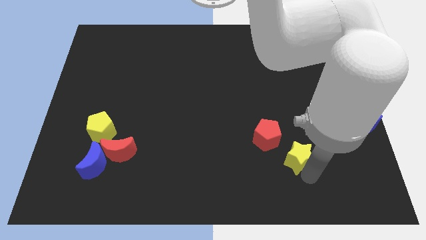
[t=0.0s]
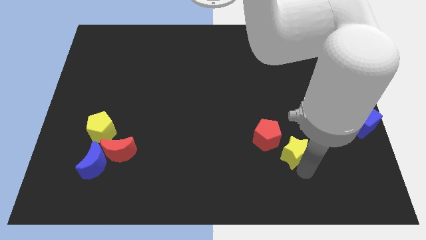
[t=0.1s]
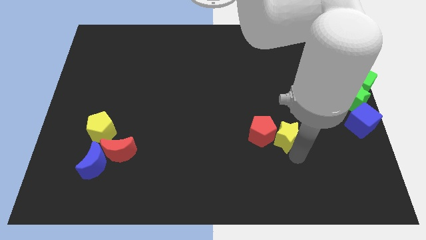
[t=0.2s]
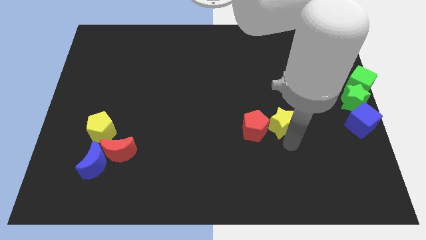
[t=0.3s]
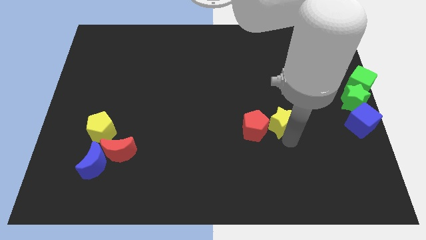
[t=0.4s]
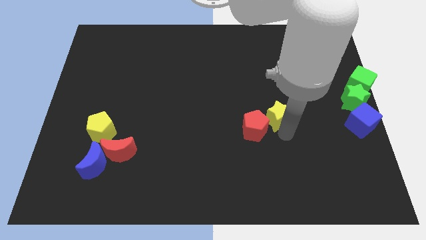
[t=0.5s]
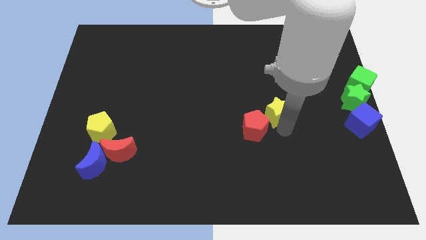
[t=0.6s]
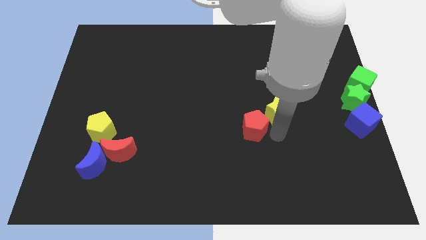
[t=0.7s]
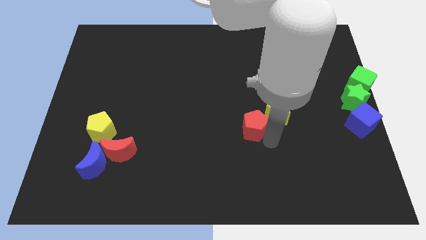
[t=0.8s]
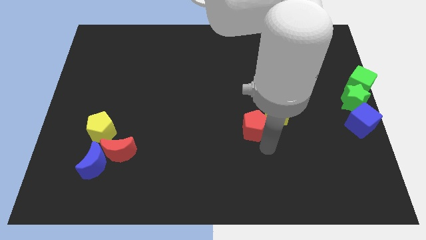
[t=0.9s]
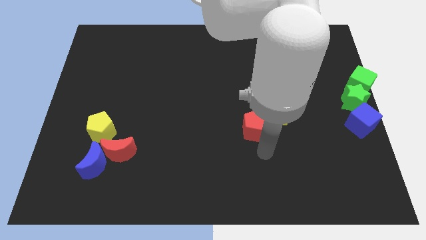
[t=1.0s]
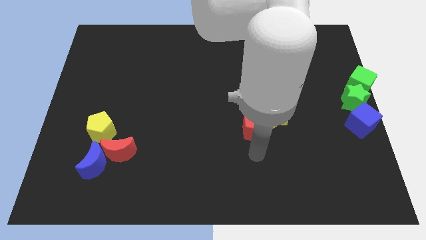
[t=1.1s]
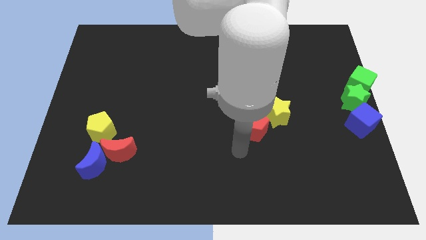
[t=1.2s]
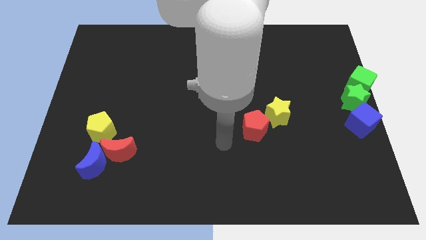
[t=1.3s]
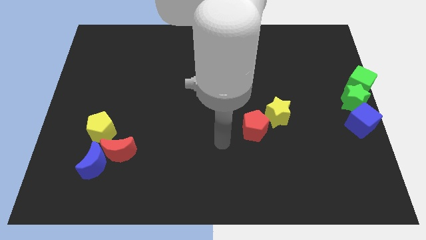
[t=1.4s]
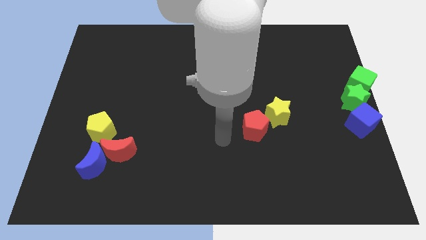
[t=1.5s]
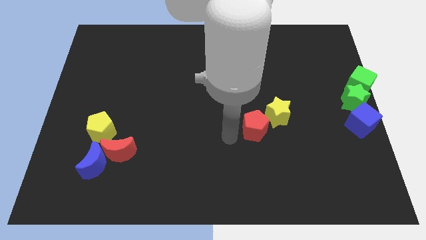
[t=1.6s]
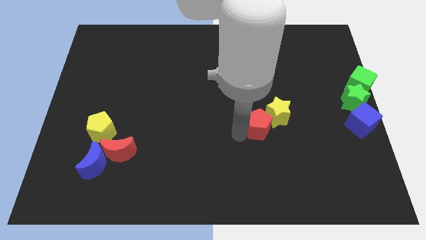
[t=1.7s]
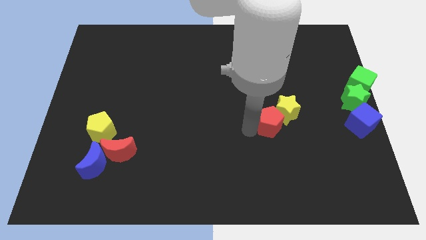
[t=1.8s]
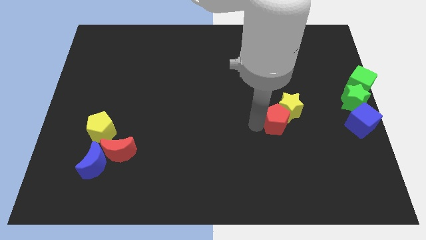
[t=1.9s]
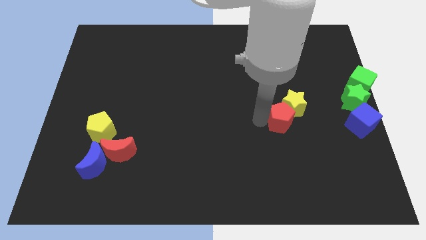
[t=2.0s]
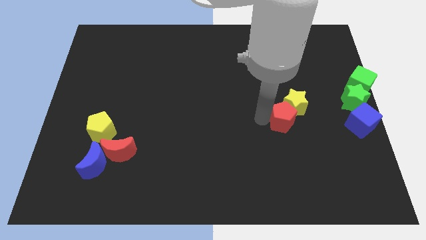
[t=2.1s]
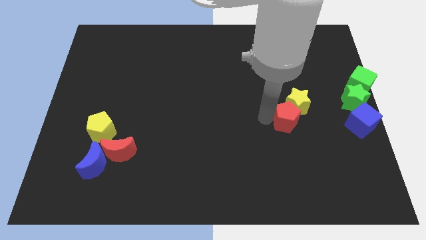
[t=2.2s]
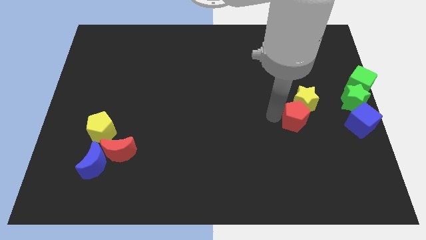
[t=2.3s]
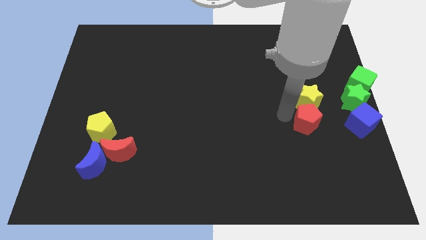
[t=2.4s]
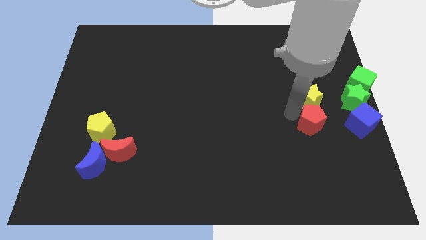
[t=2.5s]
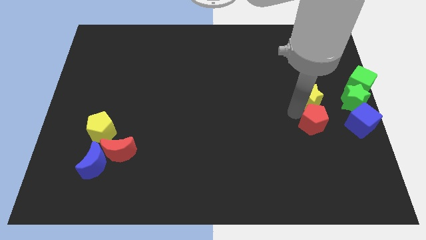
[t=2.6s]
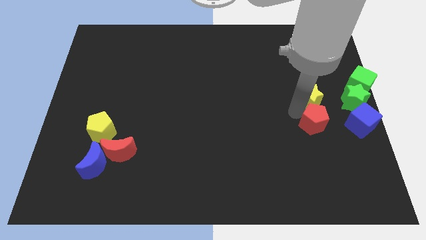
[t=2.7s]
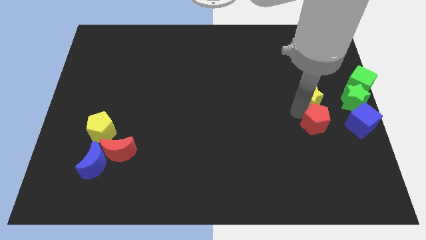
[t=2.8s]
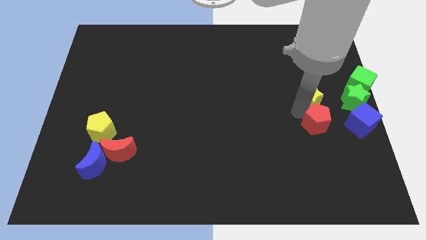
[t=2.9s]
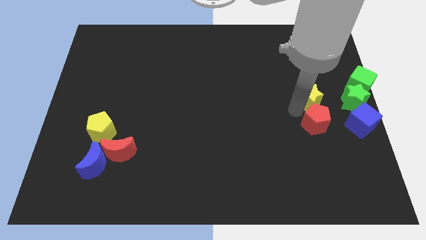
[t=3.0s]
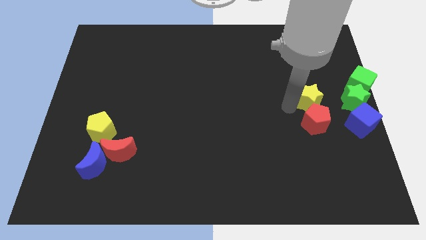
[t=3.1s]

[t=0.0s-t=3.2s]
put the yellow star and red pentagon in a line vertically

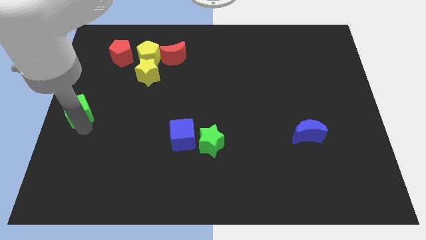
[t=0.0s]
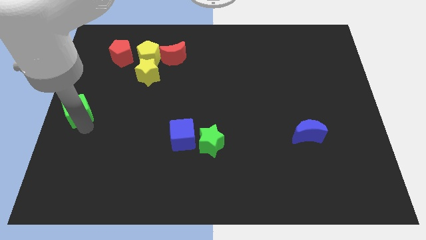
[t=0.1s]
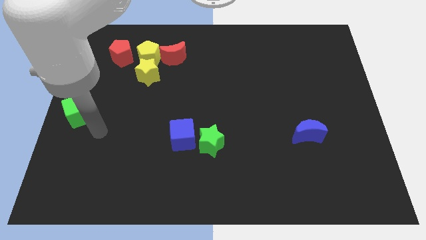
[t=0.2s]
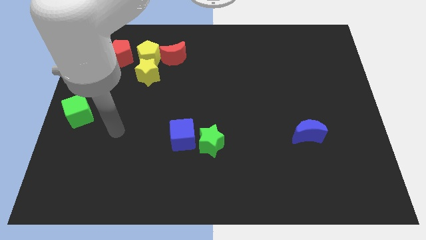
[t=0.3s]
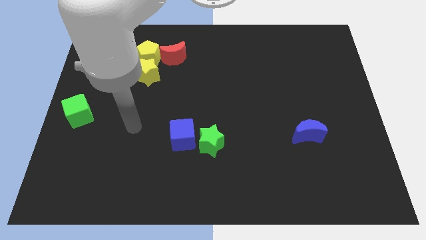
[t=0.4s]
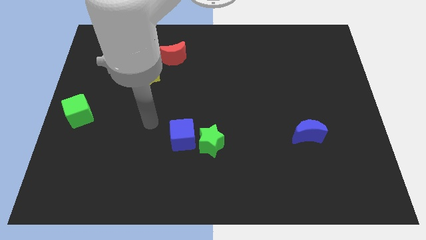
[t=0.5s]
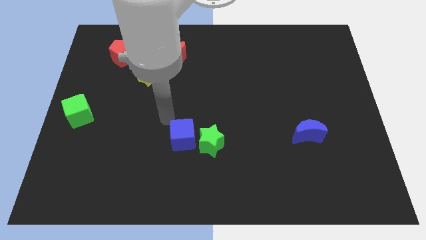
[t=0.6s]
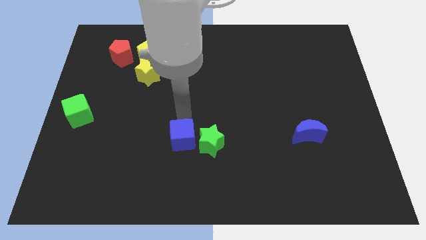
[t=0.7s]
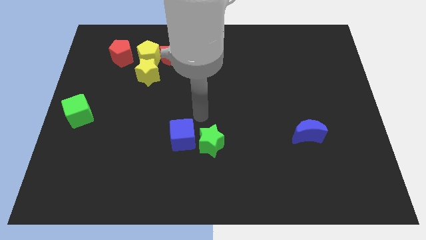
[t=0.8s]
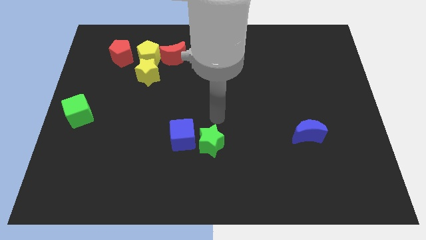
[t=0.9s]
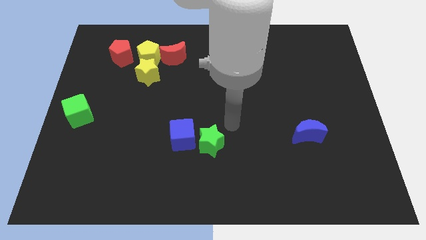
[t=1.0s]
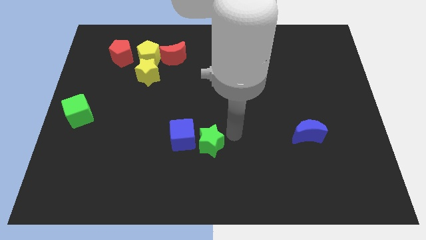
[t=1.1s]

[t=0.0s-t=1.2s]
move your arm away from the green cube

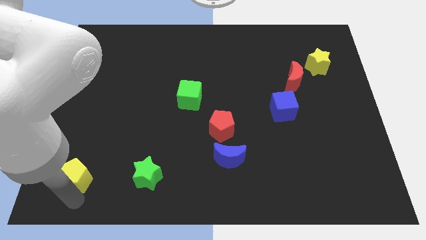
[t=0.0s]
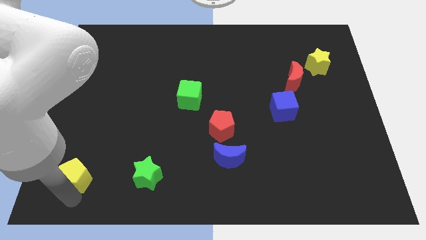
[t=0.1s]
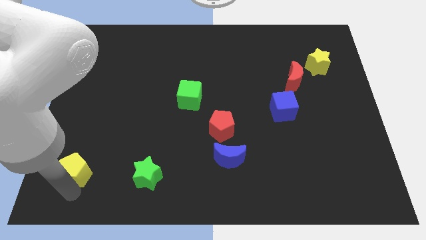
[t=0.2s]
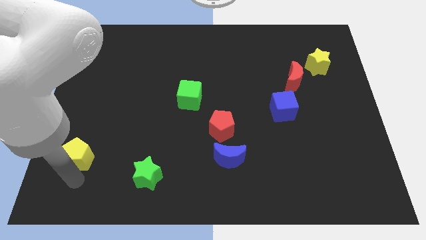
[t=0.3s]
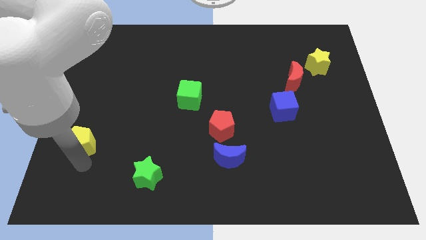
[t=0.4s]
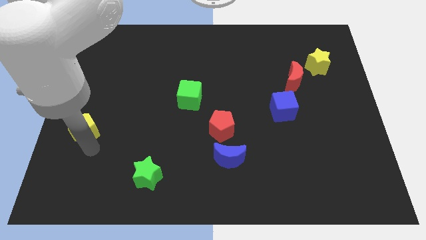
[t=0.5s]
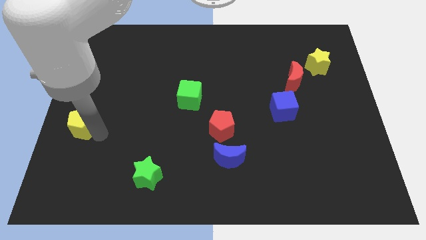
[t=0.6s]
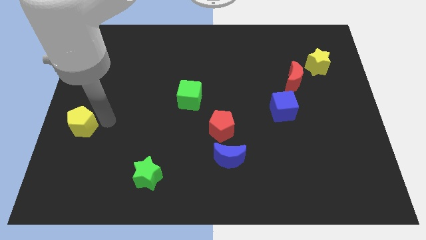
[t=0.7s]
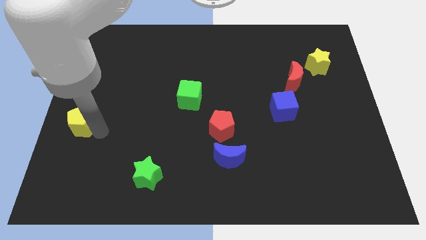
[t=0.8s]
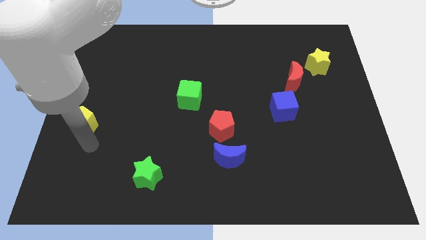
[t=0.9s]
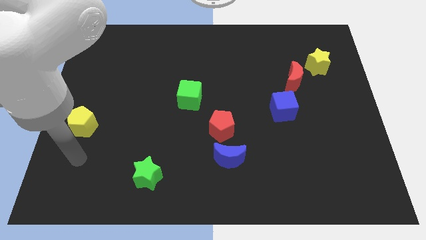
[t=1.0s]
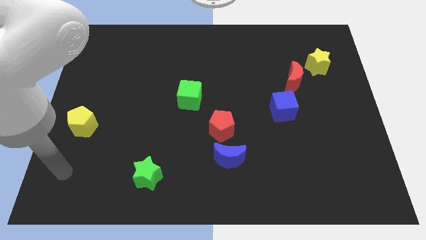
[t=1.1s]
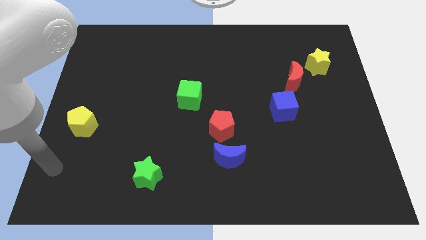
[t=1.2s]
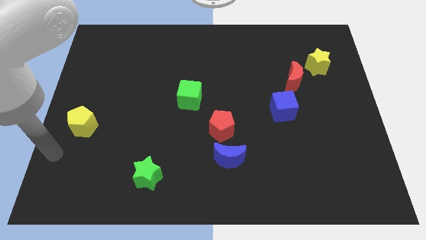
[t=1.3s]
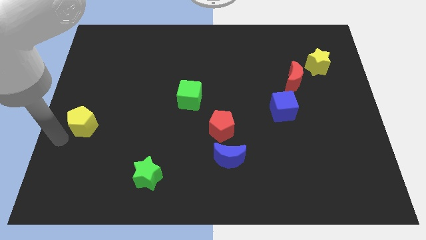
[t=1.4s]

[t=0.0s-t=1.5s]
push the yellow pentagon to the top left of the green star

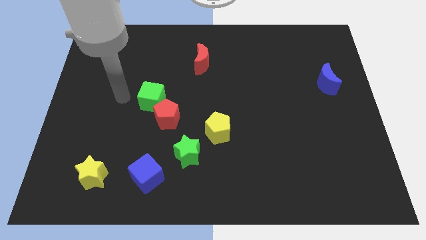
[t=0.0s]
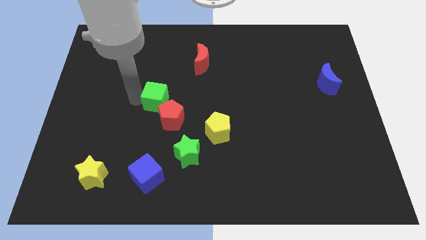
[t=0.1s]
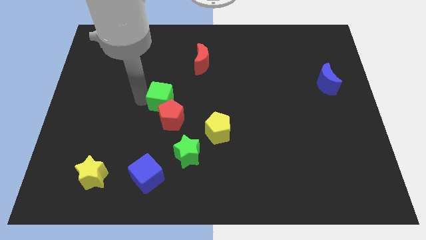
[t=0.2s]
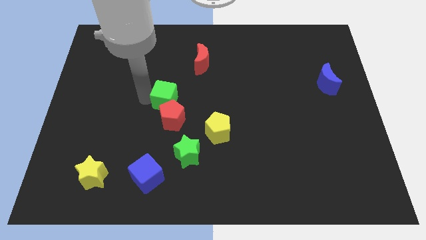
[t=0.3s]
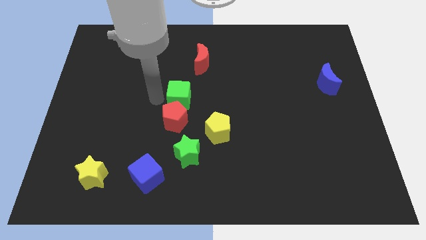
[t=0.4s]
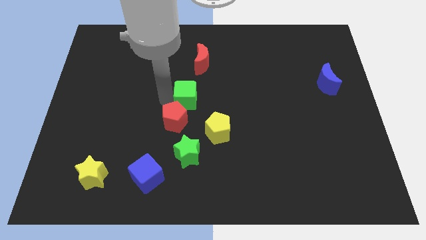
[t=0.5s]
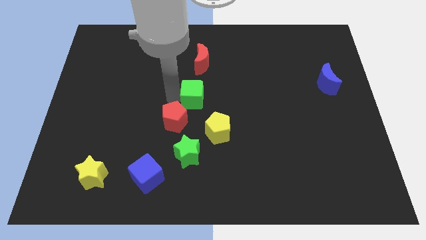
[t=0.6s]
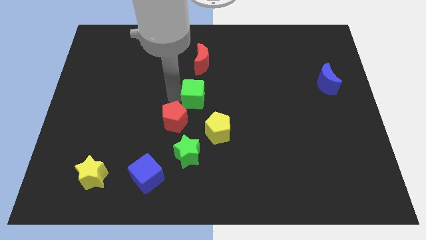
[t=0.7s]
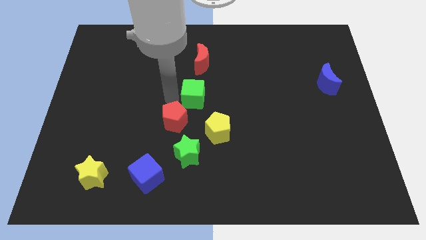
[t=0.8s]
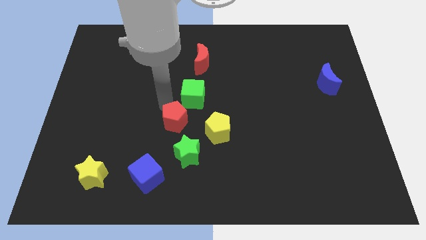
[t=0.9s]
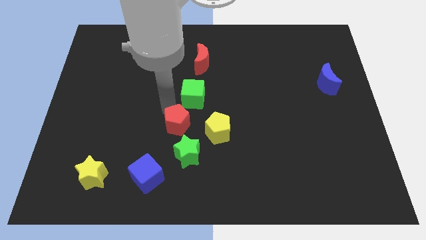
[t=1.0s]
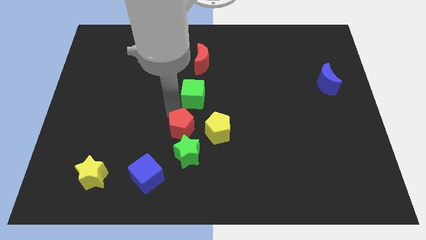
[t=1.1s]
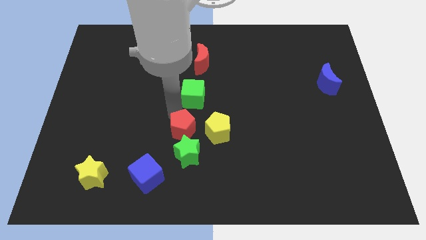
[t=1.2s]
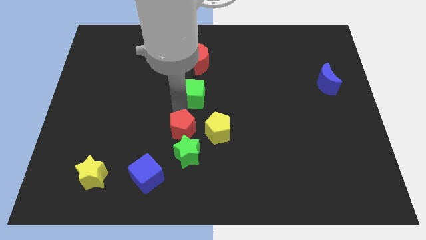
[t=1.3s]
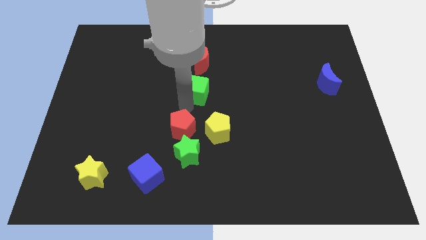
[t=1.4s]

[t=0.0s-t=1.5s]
separate green cube from the red pentagon

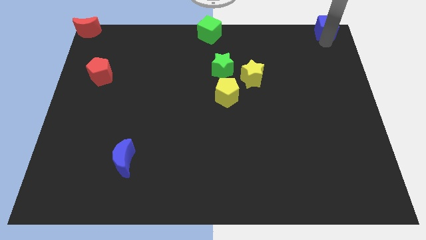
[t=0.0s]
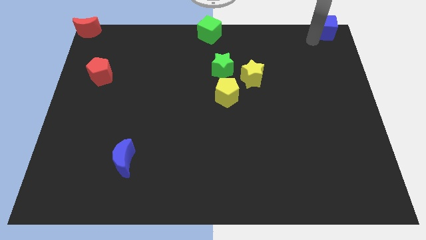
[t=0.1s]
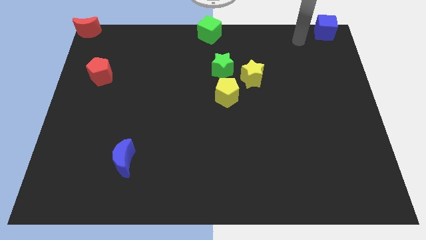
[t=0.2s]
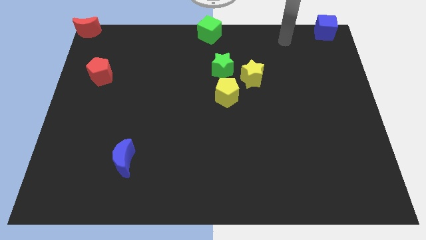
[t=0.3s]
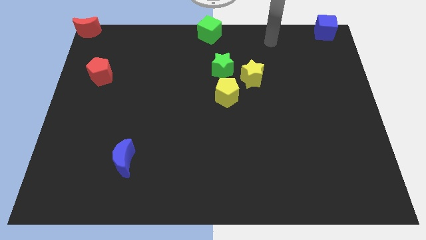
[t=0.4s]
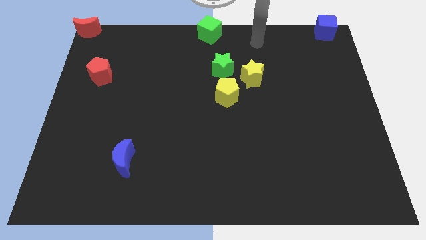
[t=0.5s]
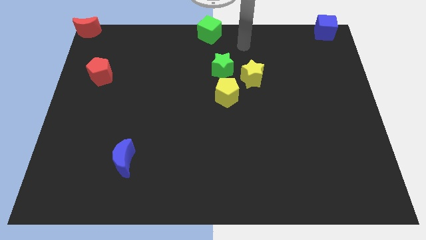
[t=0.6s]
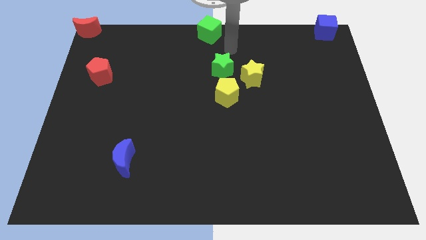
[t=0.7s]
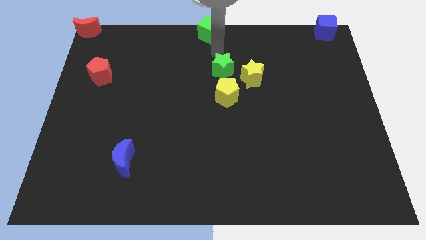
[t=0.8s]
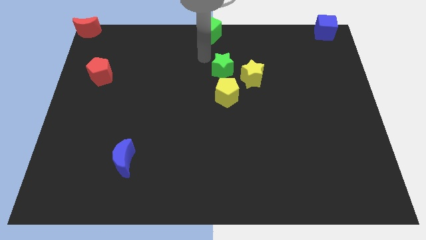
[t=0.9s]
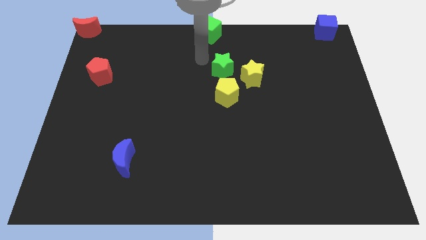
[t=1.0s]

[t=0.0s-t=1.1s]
move your arm away from blue cube

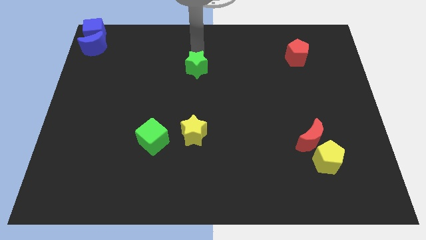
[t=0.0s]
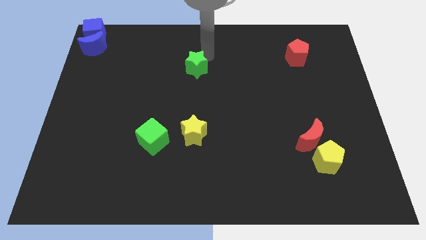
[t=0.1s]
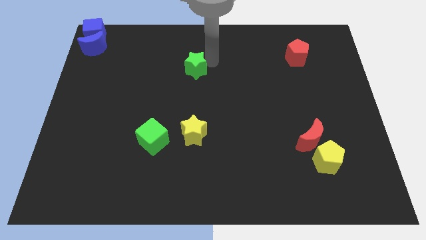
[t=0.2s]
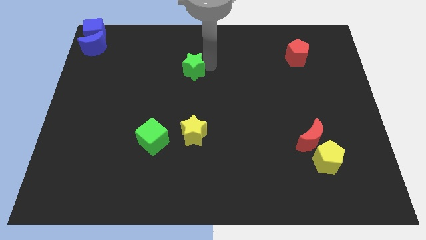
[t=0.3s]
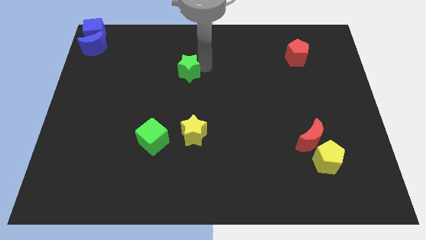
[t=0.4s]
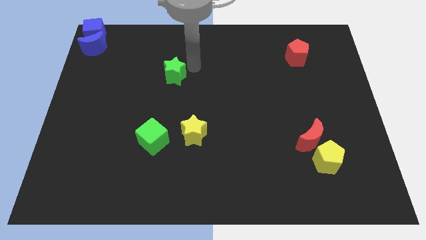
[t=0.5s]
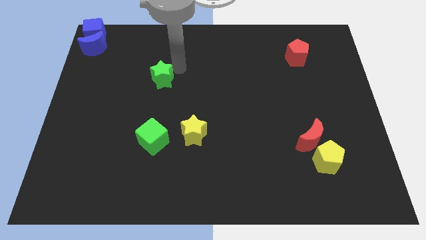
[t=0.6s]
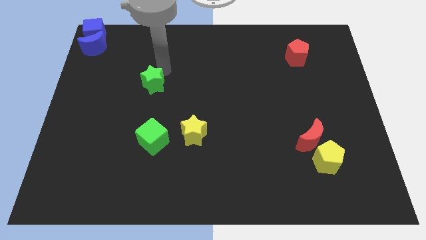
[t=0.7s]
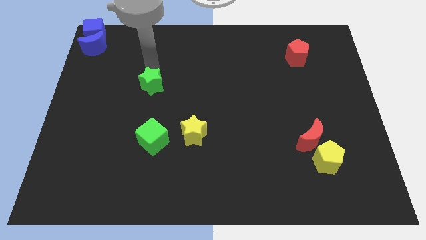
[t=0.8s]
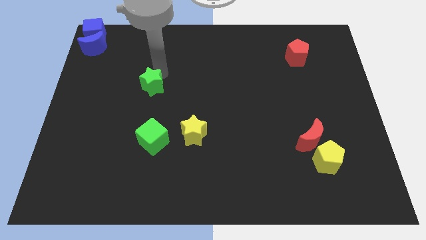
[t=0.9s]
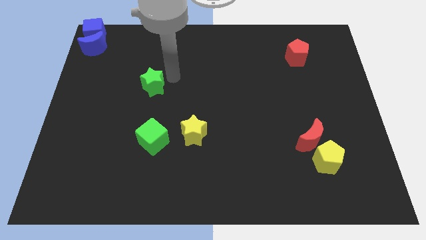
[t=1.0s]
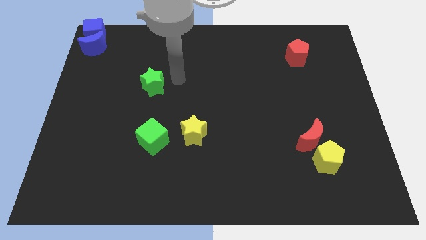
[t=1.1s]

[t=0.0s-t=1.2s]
put the green star at the top of green cube
